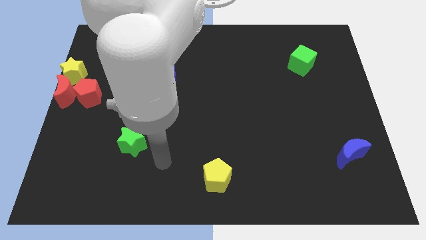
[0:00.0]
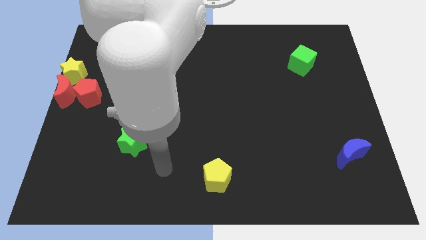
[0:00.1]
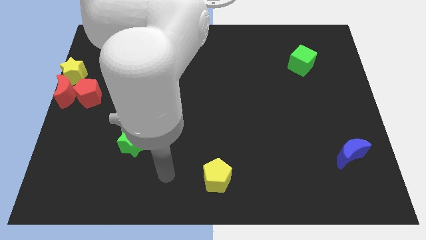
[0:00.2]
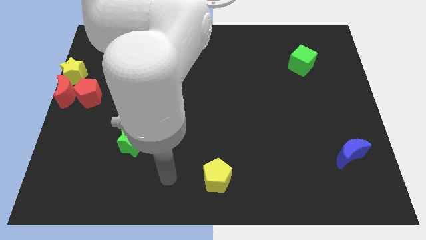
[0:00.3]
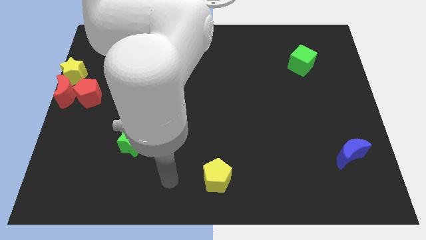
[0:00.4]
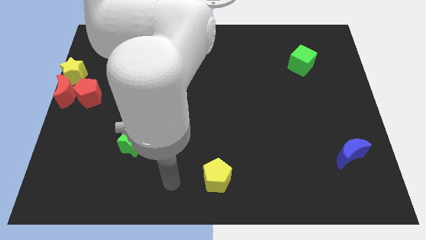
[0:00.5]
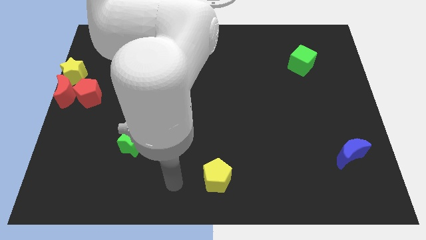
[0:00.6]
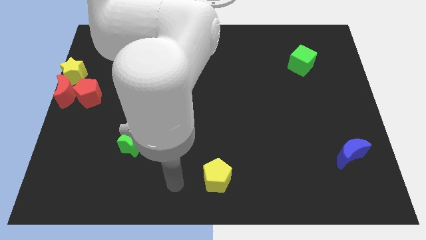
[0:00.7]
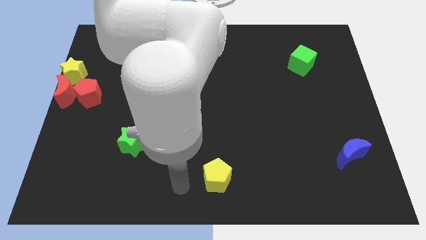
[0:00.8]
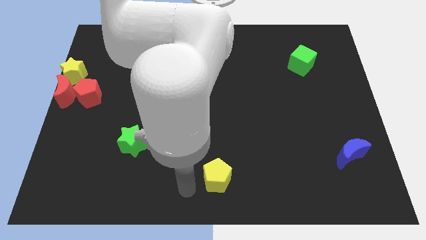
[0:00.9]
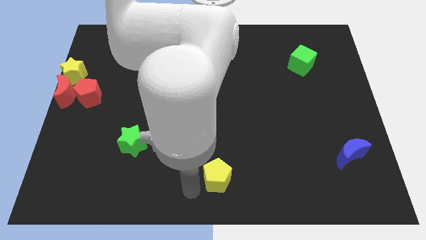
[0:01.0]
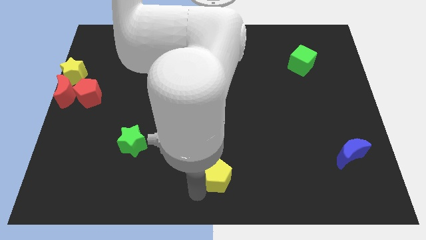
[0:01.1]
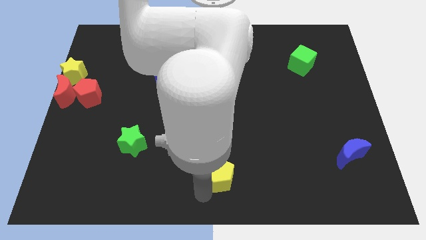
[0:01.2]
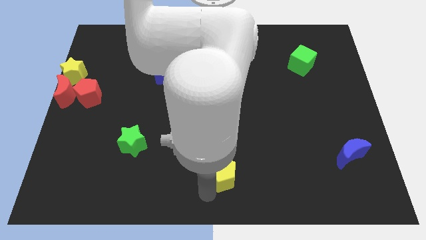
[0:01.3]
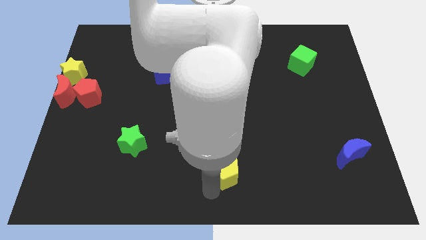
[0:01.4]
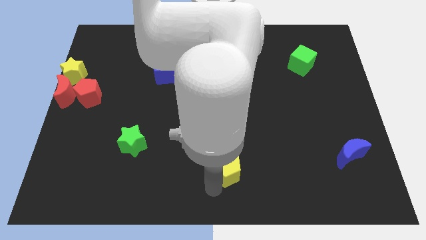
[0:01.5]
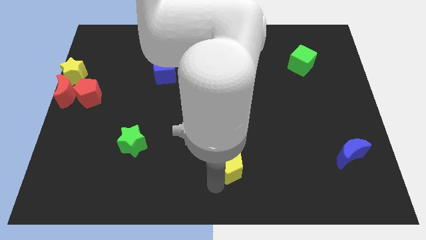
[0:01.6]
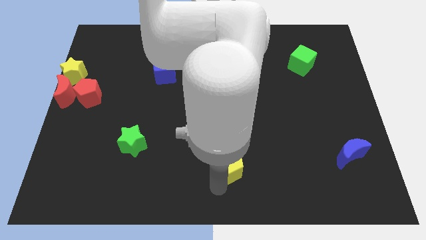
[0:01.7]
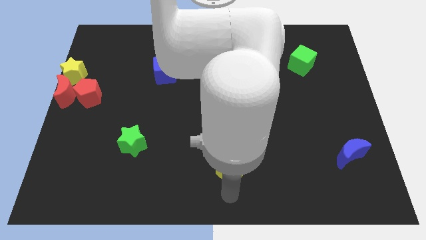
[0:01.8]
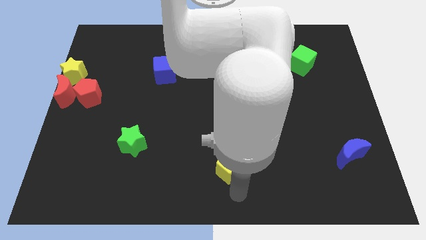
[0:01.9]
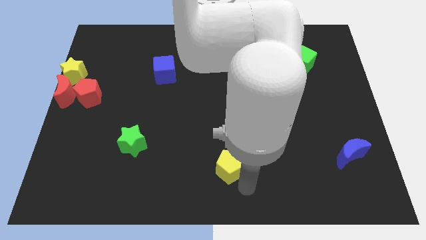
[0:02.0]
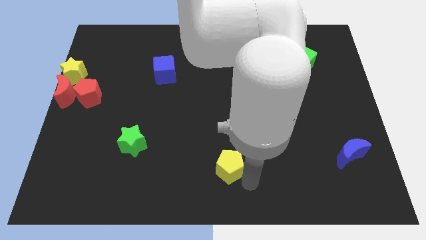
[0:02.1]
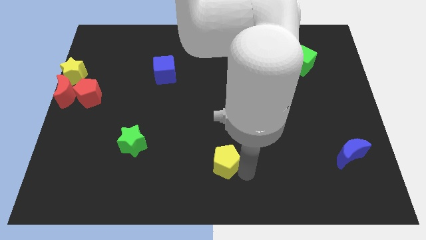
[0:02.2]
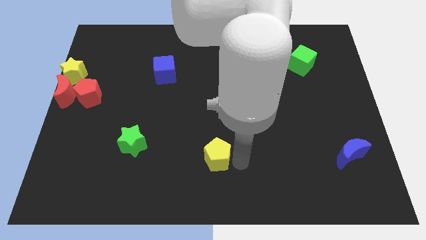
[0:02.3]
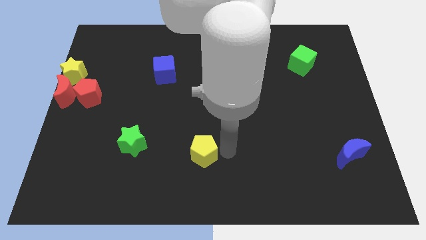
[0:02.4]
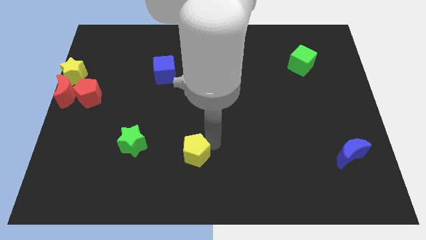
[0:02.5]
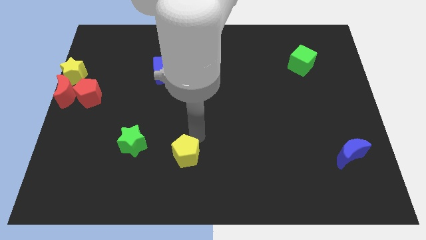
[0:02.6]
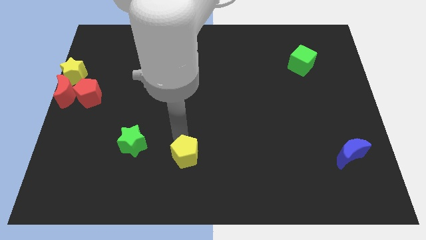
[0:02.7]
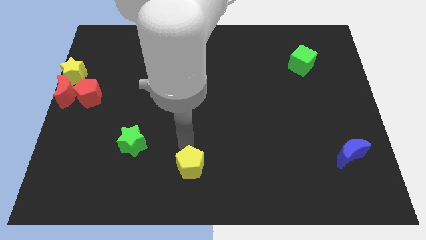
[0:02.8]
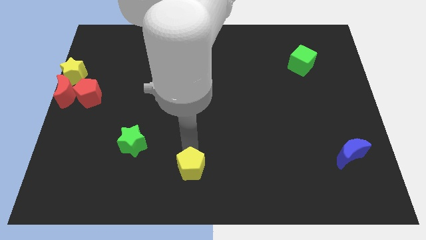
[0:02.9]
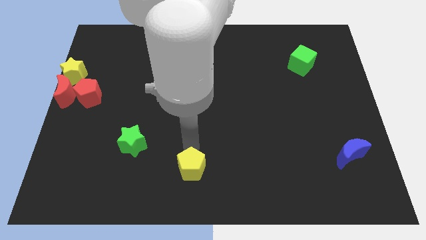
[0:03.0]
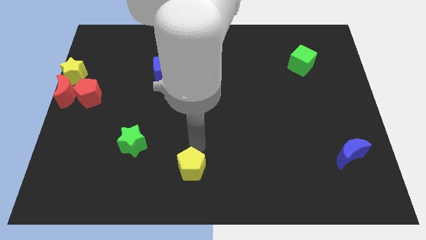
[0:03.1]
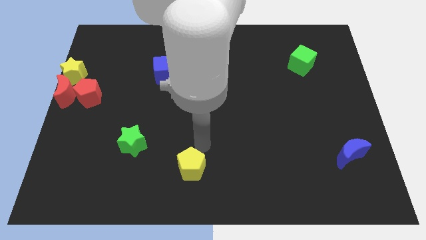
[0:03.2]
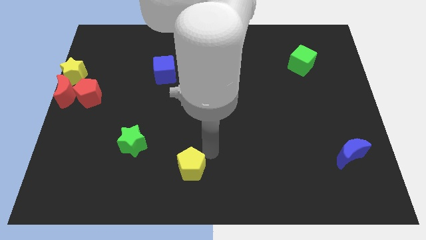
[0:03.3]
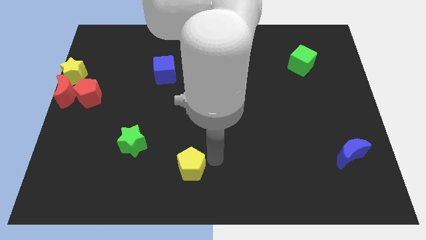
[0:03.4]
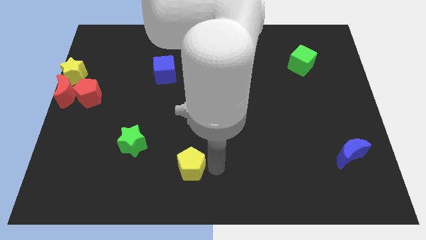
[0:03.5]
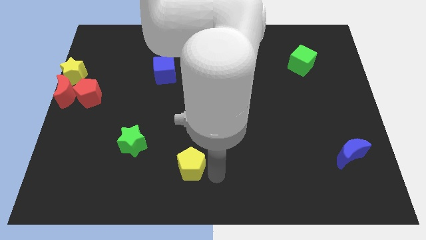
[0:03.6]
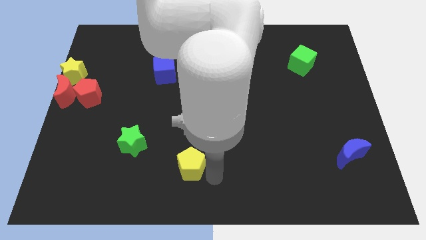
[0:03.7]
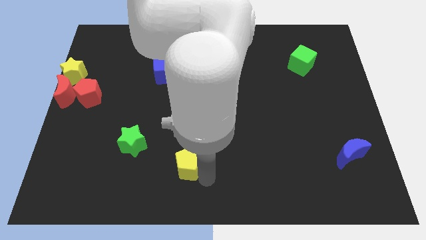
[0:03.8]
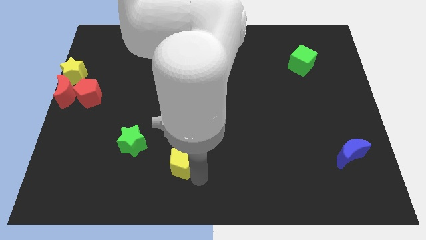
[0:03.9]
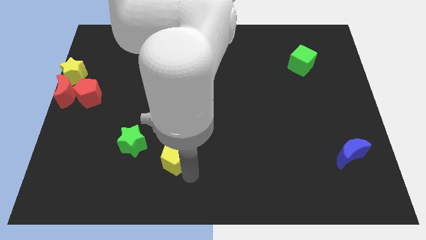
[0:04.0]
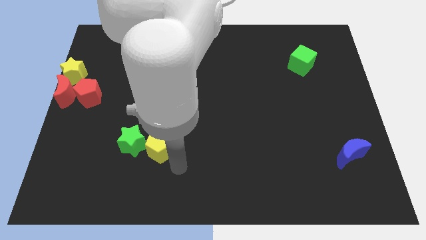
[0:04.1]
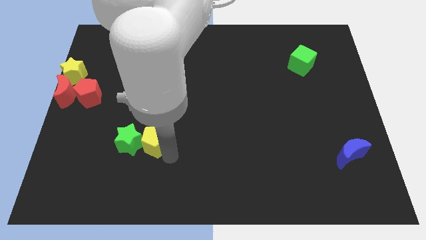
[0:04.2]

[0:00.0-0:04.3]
move yellow pentagon to the left of green star

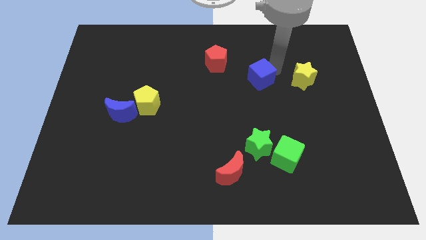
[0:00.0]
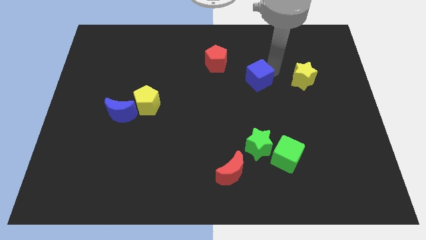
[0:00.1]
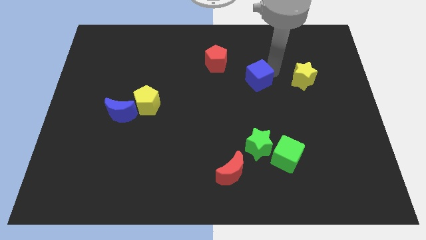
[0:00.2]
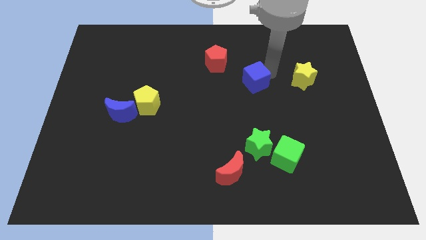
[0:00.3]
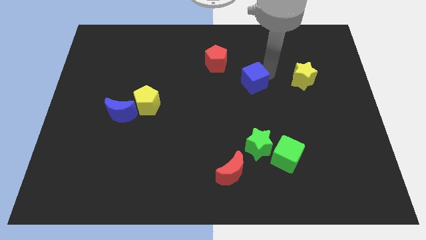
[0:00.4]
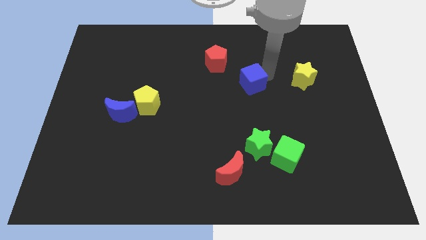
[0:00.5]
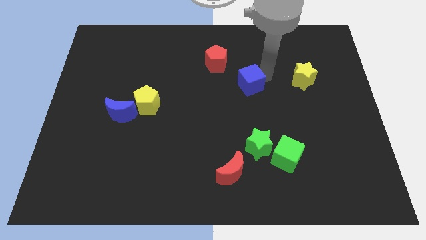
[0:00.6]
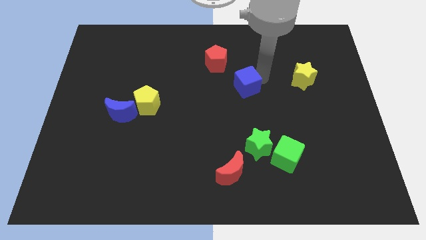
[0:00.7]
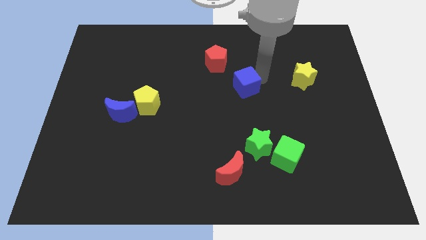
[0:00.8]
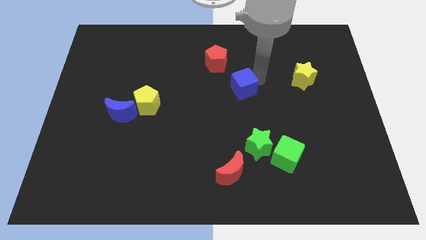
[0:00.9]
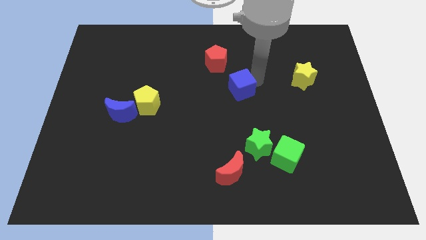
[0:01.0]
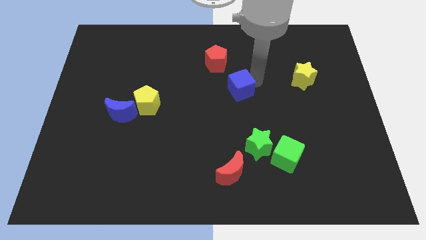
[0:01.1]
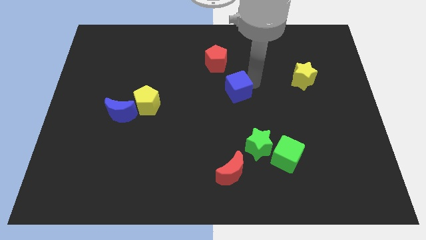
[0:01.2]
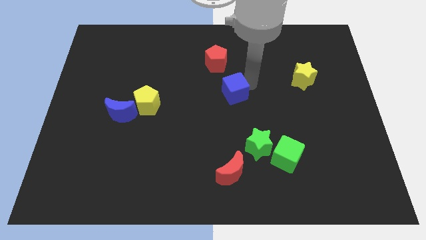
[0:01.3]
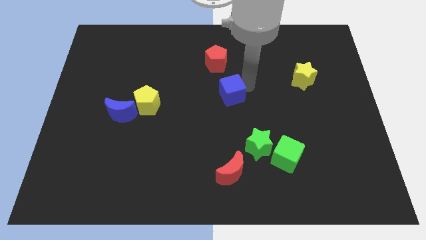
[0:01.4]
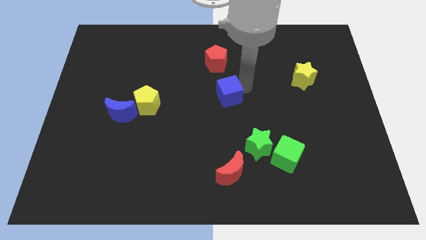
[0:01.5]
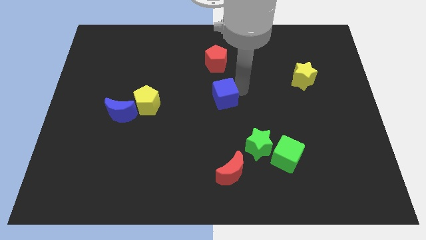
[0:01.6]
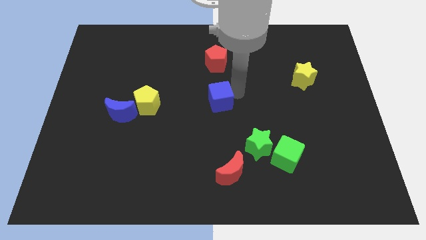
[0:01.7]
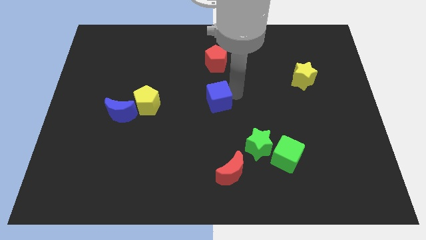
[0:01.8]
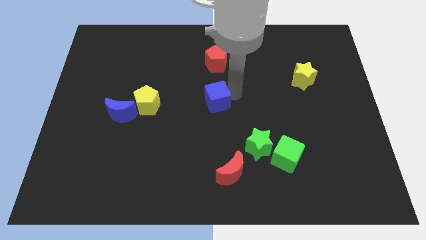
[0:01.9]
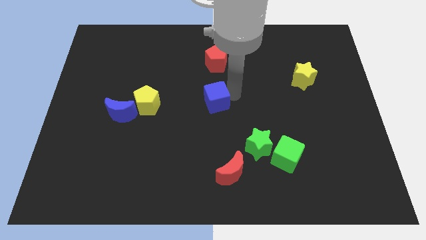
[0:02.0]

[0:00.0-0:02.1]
place the blue cube at the center of the board

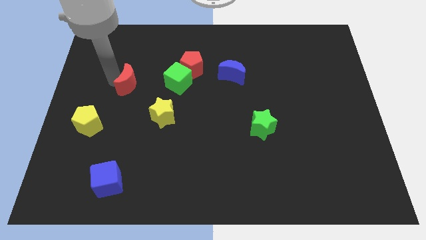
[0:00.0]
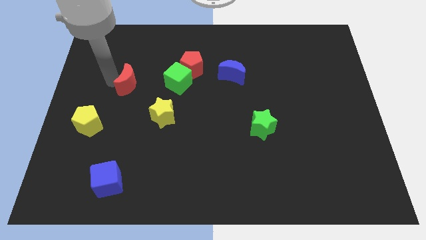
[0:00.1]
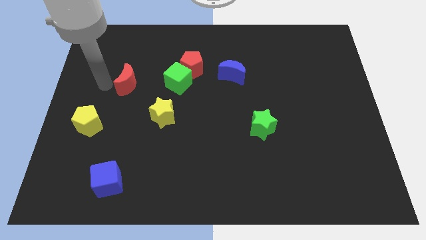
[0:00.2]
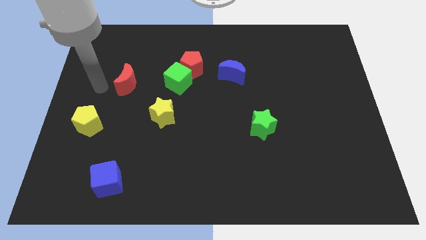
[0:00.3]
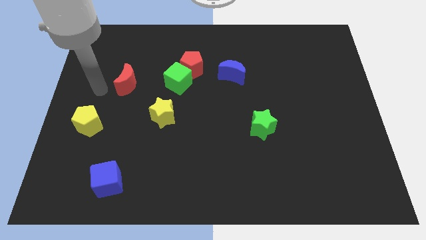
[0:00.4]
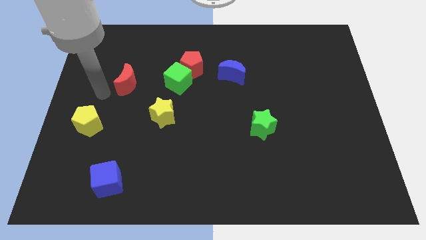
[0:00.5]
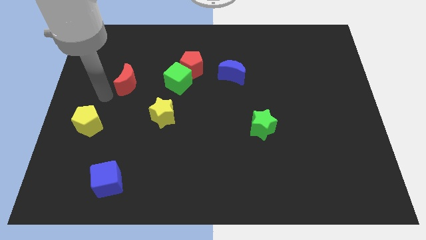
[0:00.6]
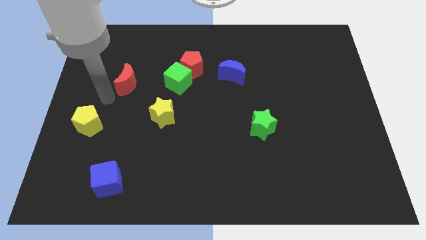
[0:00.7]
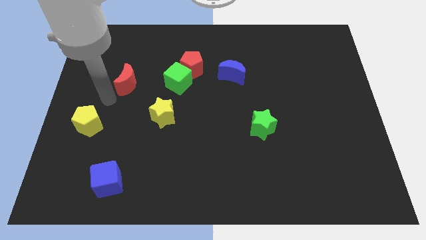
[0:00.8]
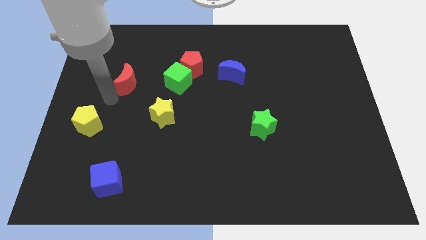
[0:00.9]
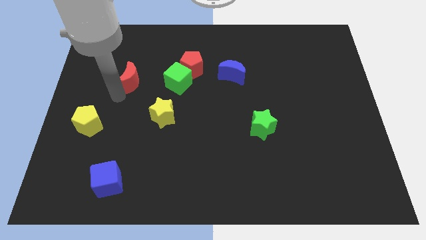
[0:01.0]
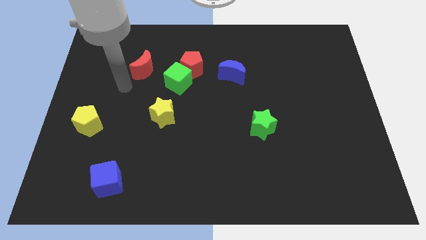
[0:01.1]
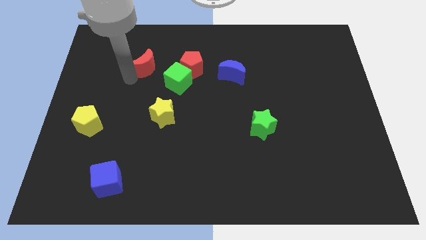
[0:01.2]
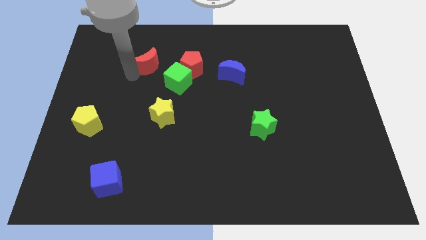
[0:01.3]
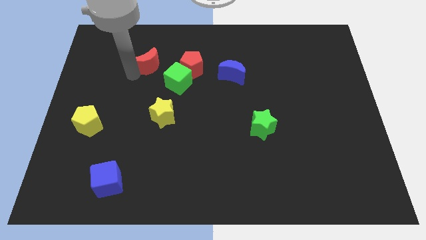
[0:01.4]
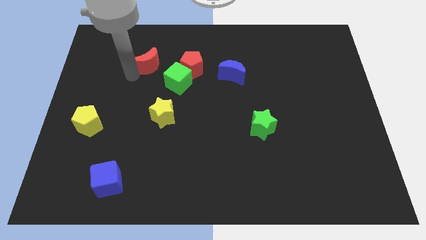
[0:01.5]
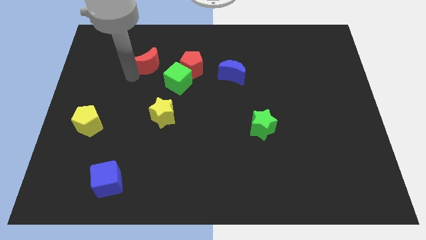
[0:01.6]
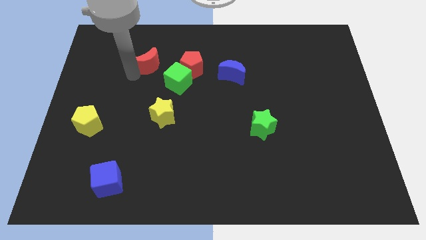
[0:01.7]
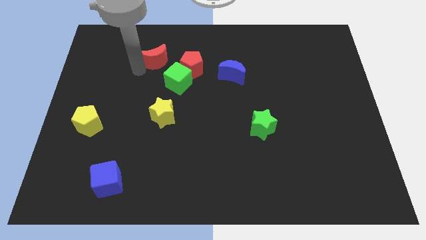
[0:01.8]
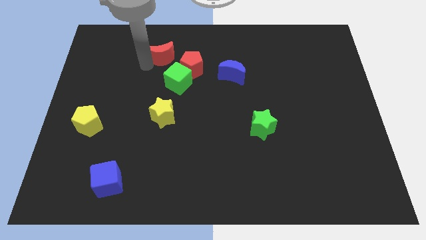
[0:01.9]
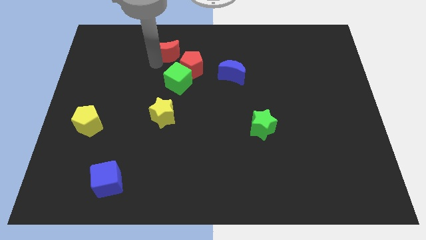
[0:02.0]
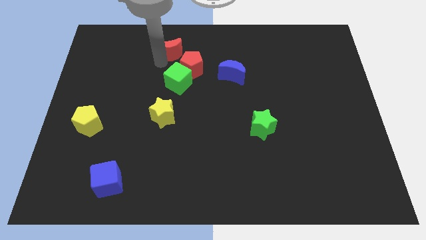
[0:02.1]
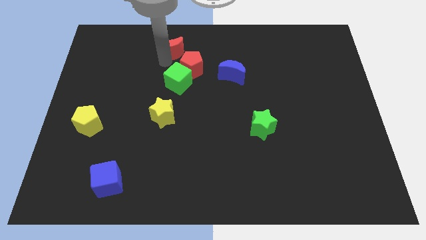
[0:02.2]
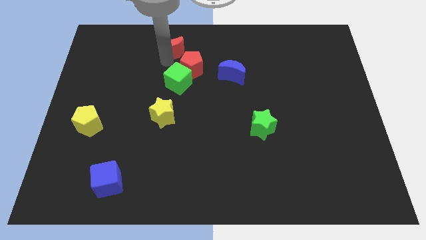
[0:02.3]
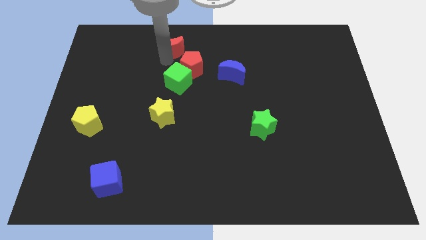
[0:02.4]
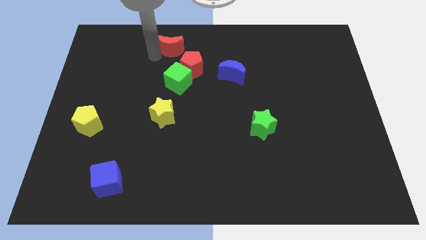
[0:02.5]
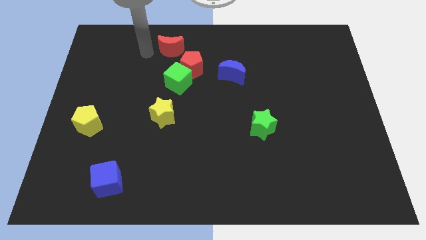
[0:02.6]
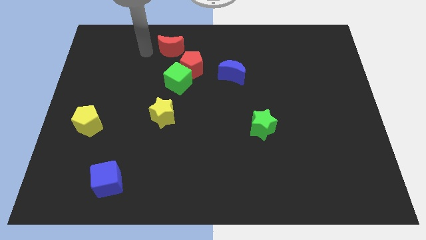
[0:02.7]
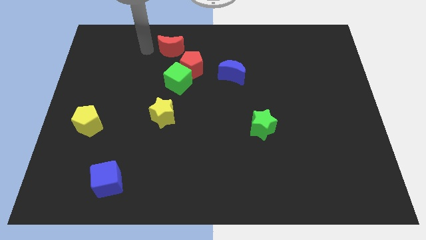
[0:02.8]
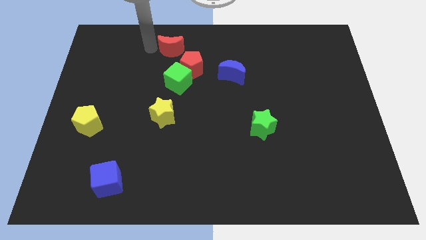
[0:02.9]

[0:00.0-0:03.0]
place the red moon diagonally top right to the yellow pentagon
